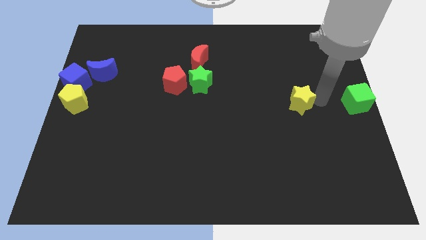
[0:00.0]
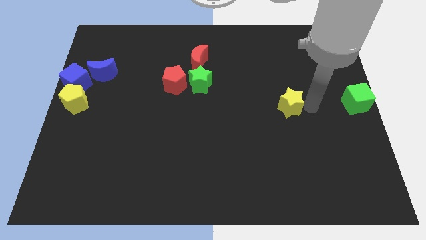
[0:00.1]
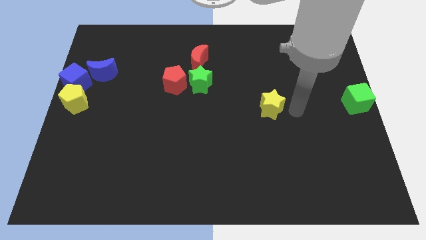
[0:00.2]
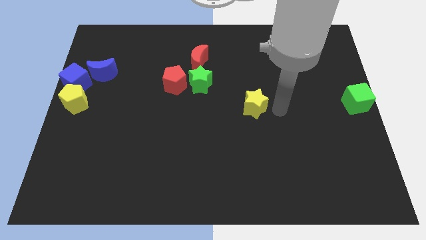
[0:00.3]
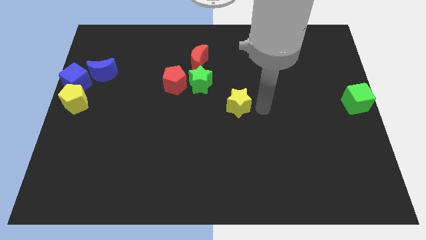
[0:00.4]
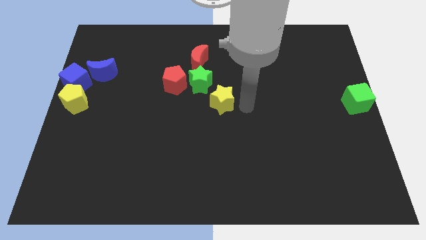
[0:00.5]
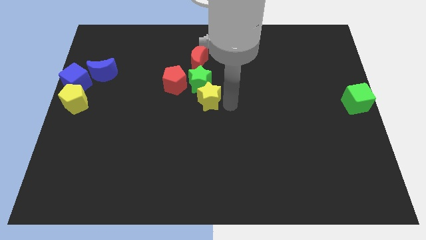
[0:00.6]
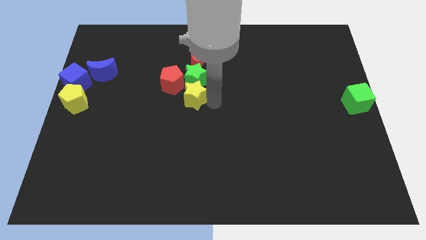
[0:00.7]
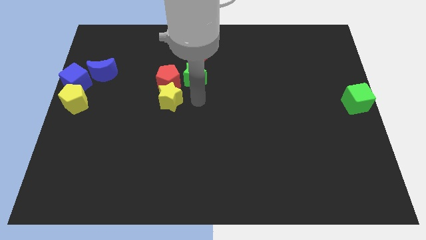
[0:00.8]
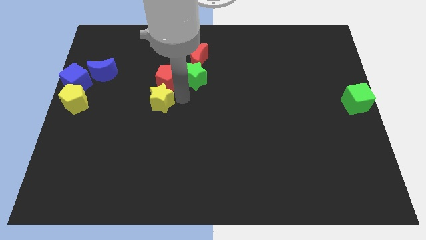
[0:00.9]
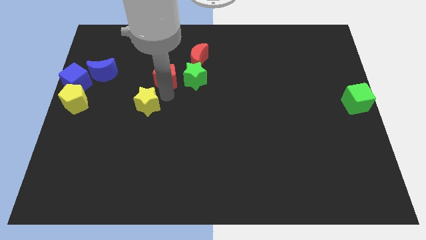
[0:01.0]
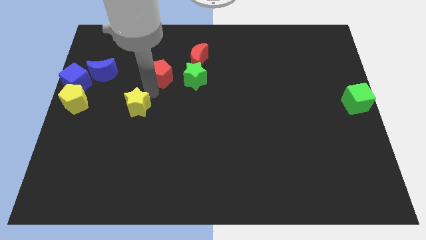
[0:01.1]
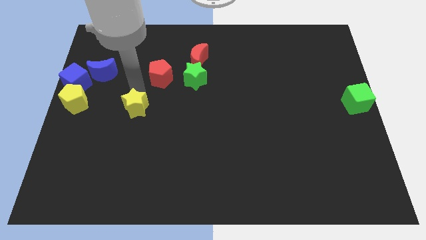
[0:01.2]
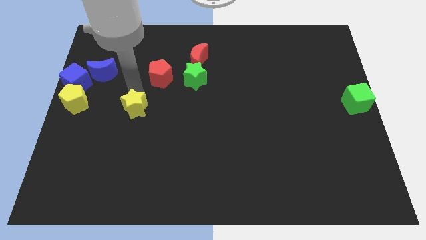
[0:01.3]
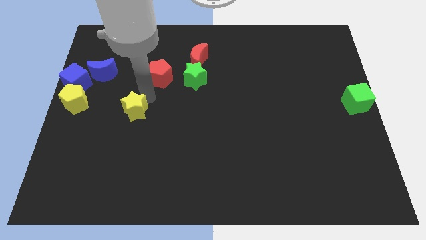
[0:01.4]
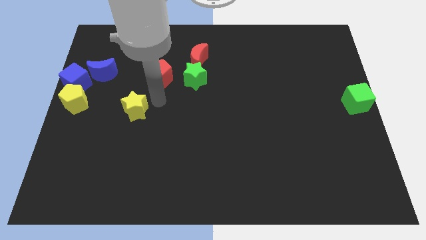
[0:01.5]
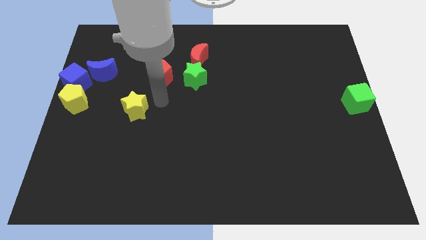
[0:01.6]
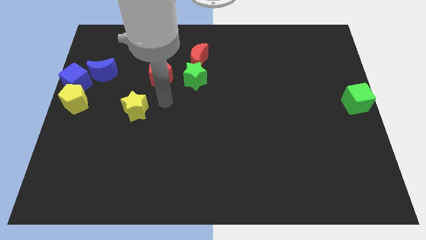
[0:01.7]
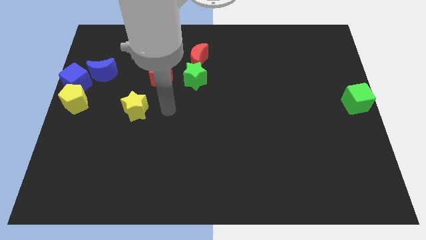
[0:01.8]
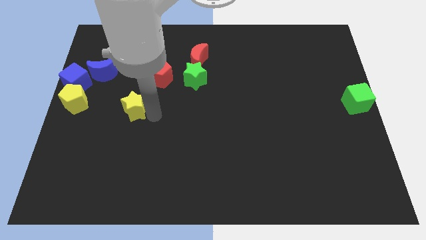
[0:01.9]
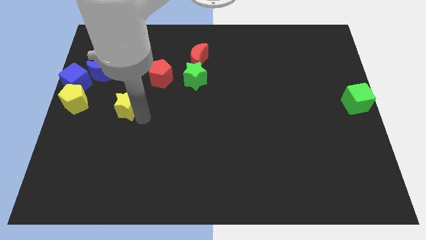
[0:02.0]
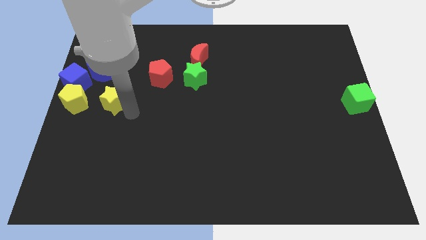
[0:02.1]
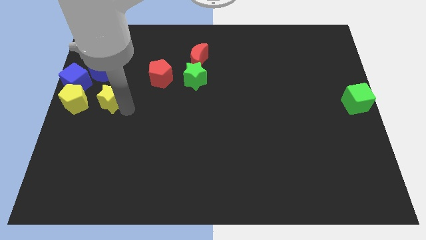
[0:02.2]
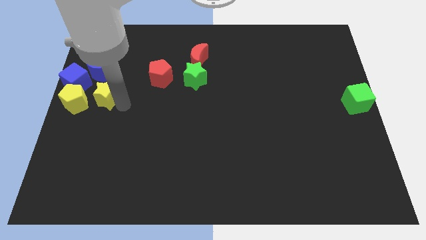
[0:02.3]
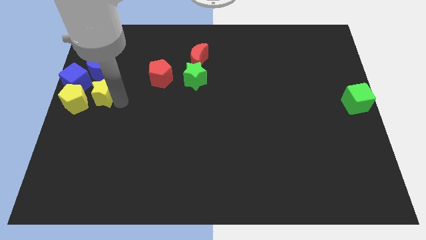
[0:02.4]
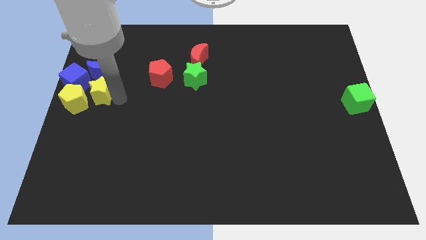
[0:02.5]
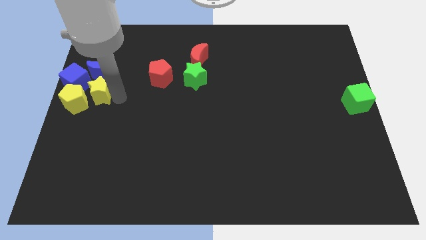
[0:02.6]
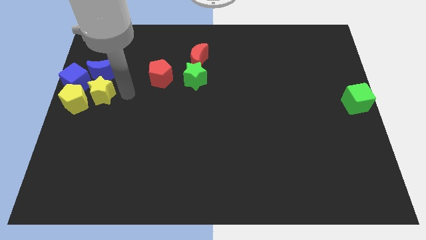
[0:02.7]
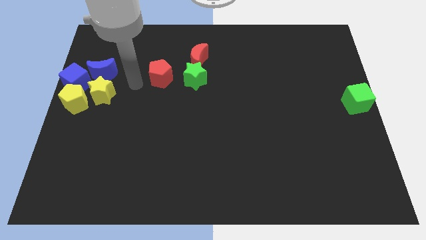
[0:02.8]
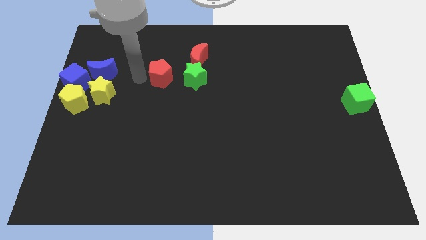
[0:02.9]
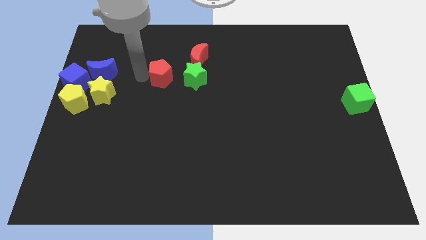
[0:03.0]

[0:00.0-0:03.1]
slide the yellow star to the bottom of the blue moon

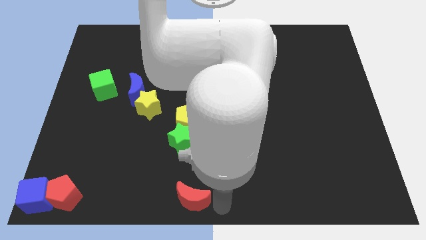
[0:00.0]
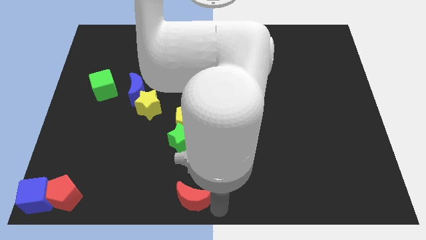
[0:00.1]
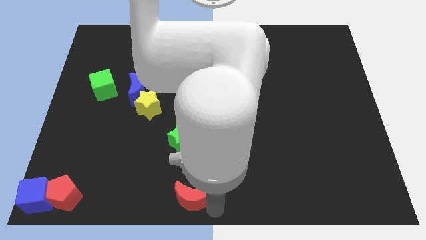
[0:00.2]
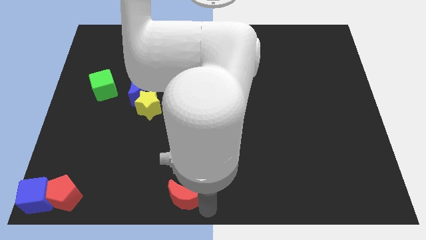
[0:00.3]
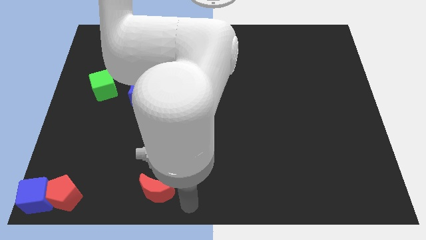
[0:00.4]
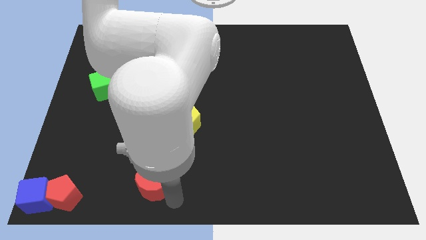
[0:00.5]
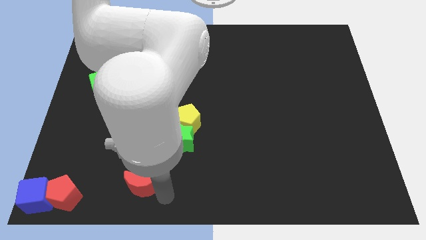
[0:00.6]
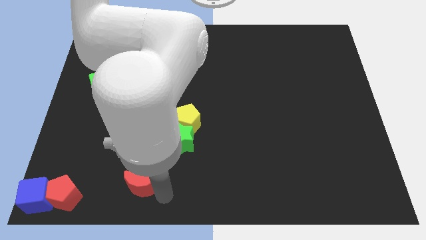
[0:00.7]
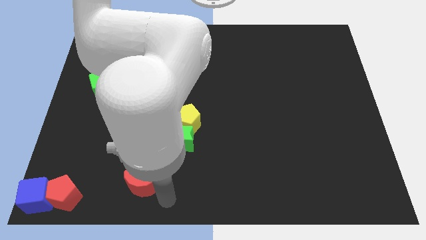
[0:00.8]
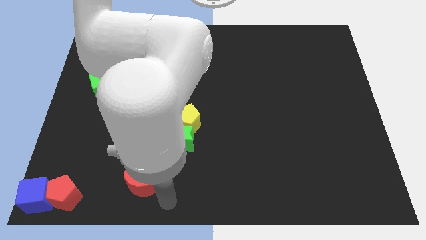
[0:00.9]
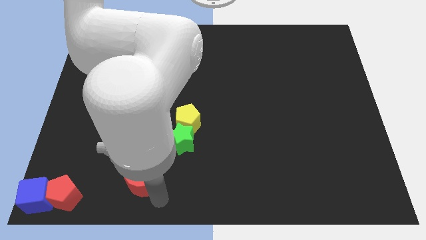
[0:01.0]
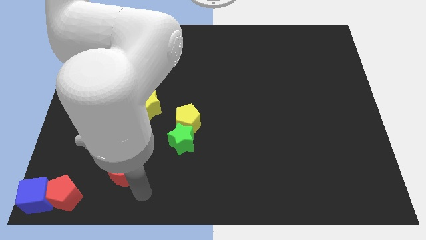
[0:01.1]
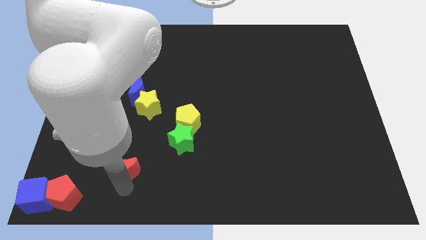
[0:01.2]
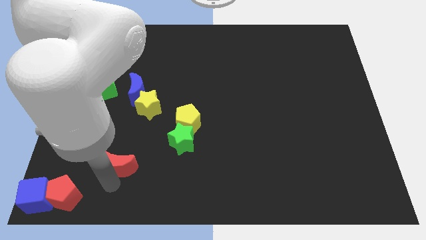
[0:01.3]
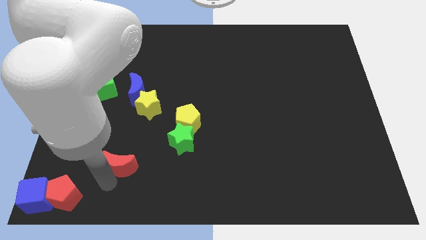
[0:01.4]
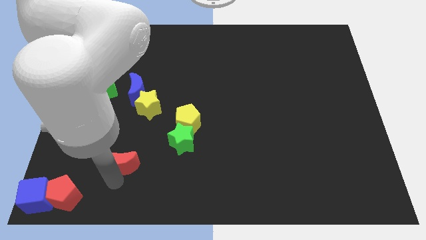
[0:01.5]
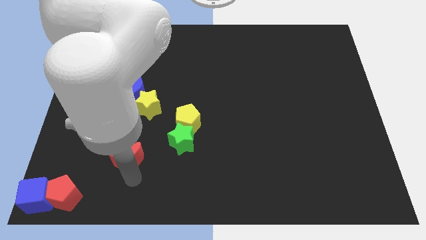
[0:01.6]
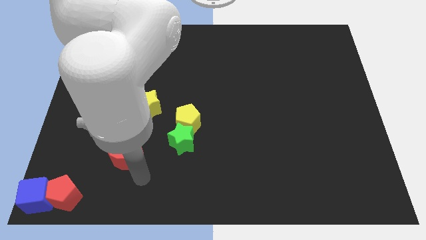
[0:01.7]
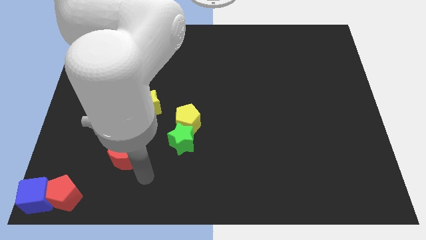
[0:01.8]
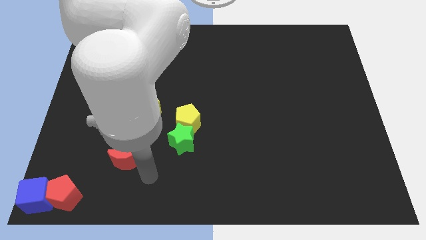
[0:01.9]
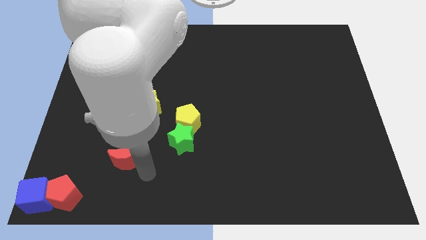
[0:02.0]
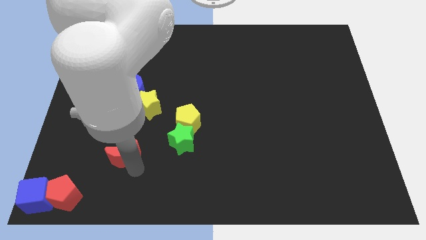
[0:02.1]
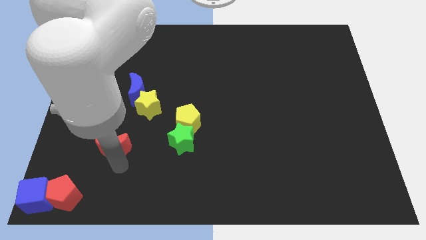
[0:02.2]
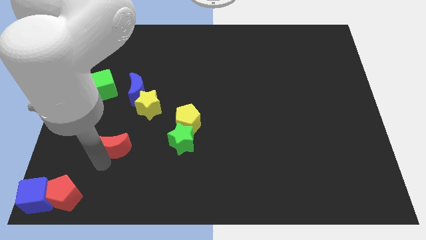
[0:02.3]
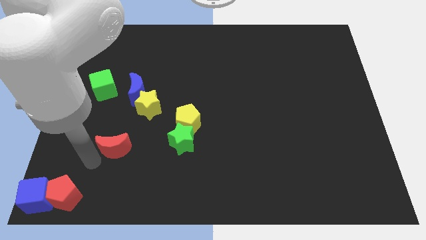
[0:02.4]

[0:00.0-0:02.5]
push red moon diagonally to the top right to the red pentagon

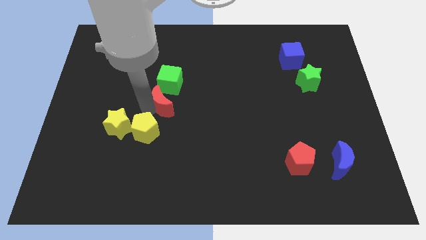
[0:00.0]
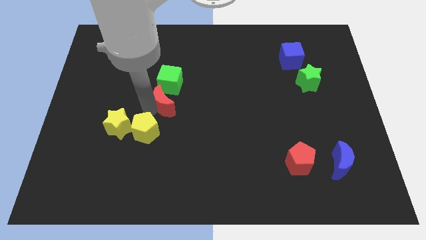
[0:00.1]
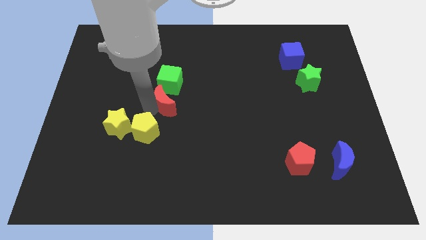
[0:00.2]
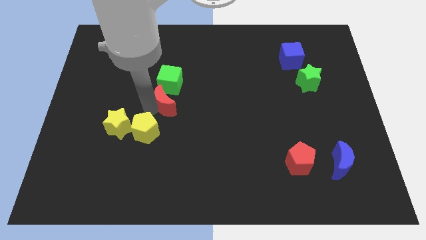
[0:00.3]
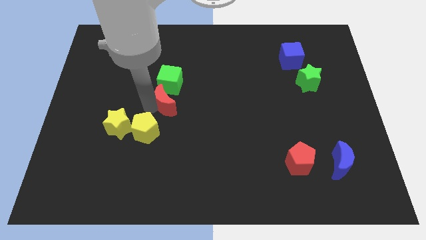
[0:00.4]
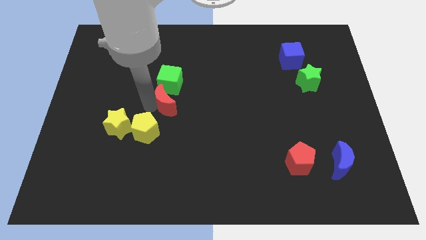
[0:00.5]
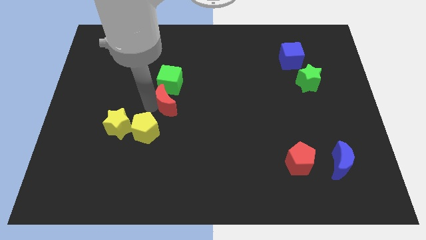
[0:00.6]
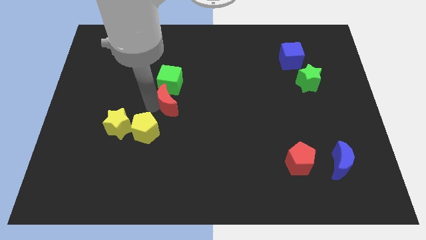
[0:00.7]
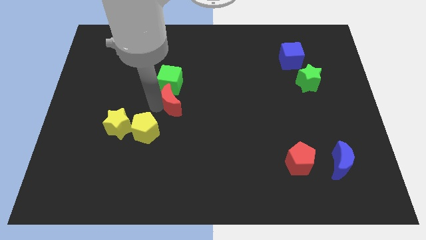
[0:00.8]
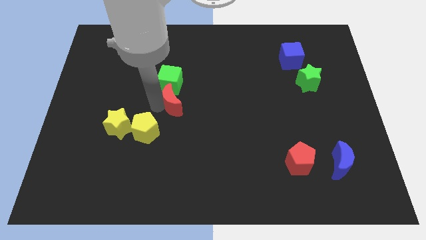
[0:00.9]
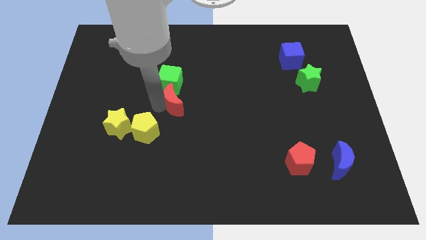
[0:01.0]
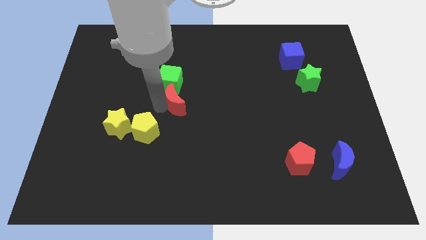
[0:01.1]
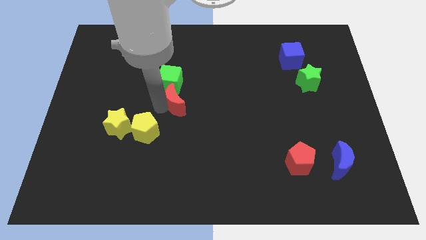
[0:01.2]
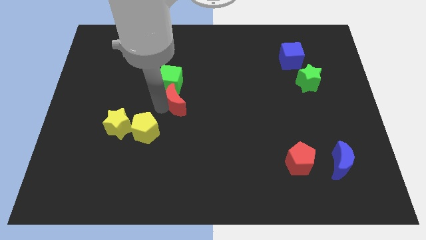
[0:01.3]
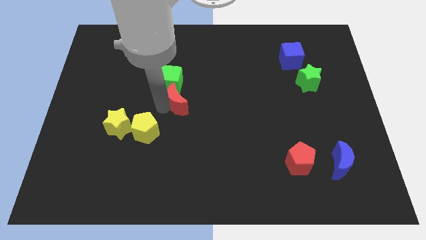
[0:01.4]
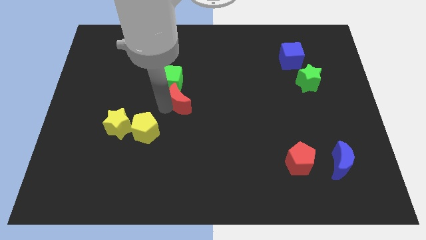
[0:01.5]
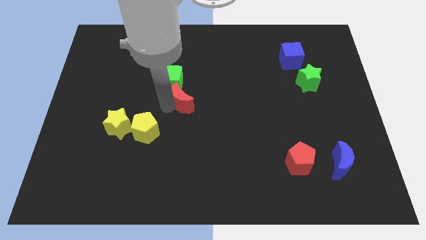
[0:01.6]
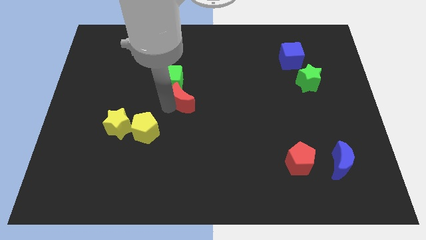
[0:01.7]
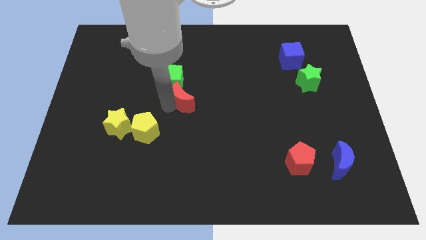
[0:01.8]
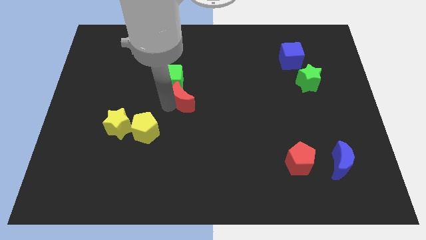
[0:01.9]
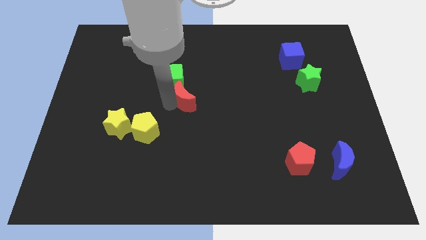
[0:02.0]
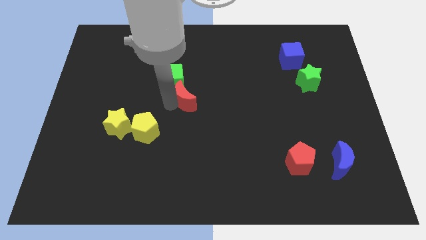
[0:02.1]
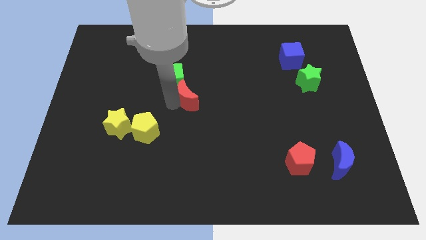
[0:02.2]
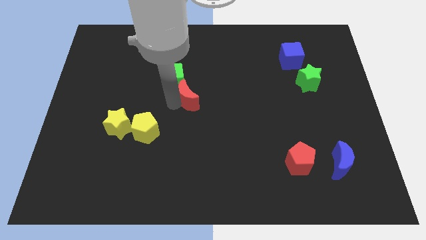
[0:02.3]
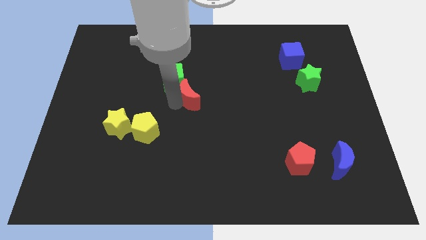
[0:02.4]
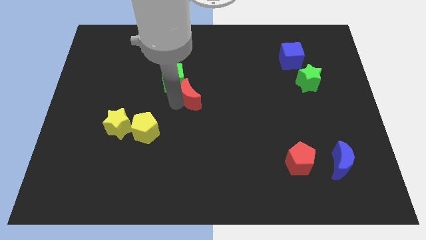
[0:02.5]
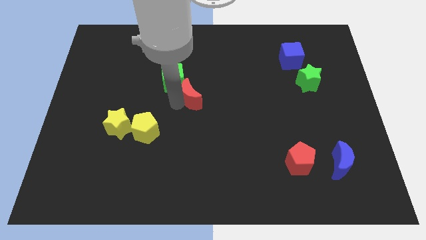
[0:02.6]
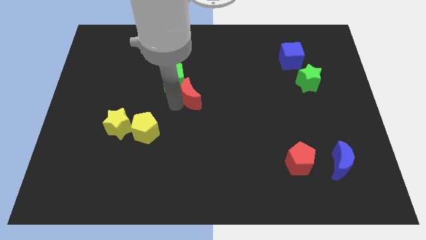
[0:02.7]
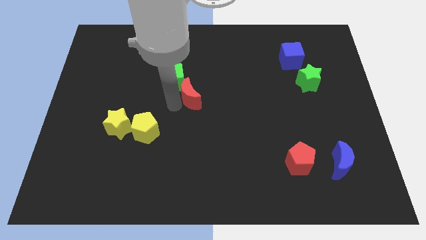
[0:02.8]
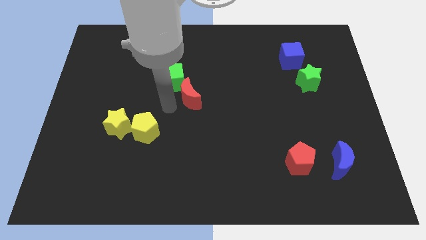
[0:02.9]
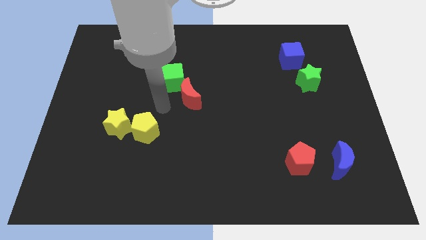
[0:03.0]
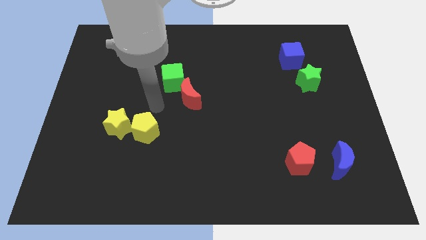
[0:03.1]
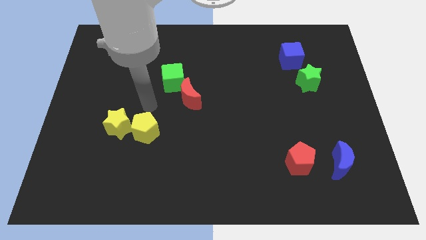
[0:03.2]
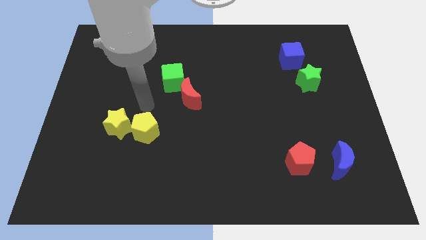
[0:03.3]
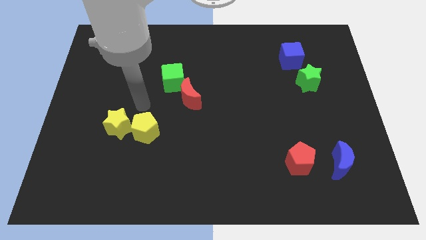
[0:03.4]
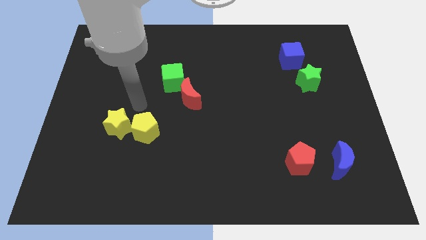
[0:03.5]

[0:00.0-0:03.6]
push the red crescent to the bottom right of green cube
